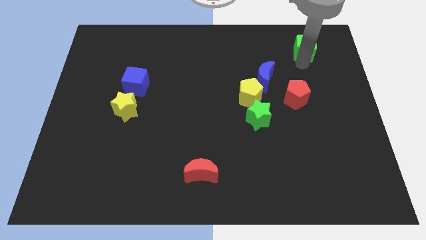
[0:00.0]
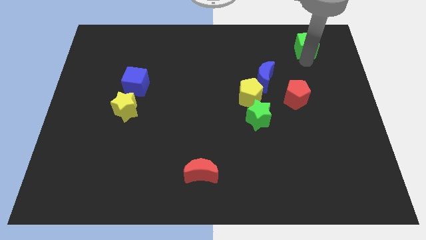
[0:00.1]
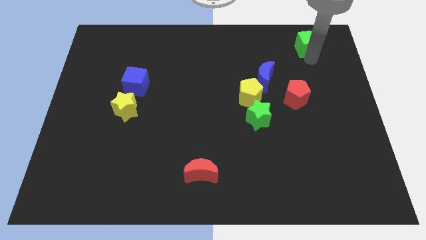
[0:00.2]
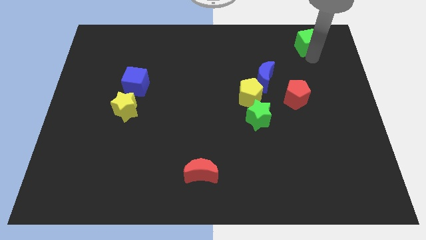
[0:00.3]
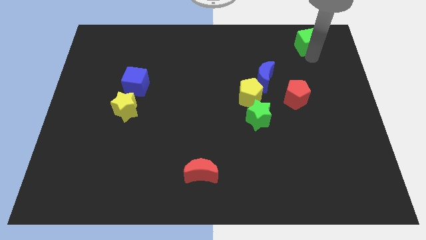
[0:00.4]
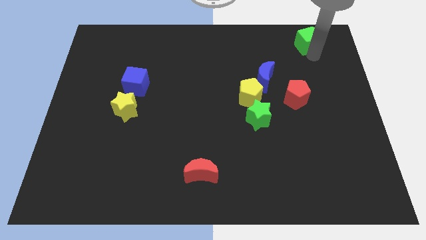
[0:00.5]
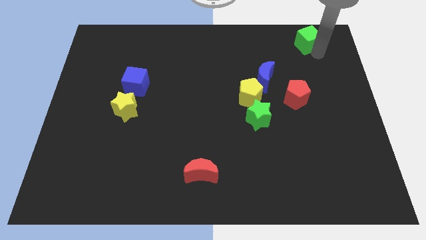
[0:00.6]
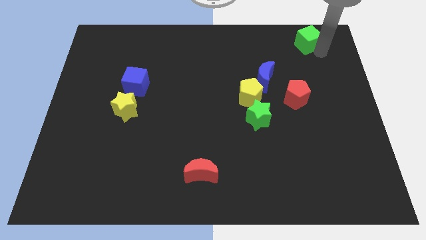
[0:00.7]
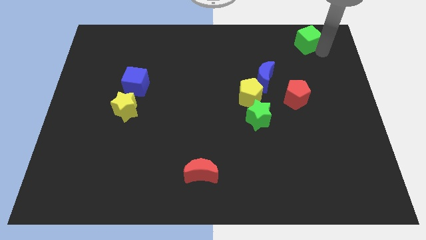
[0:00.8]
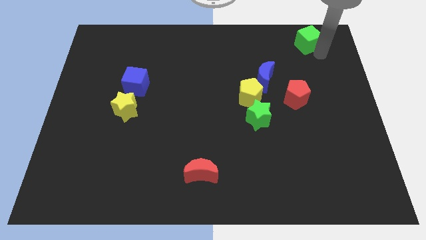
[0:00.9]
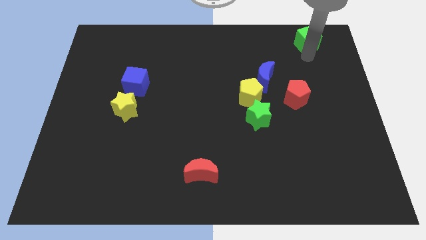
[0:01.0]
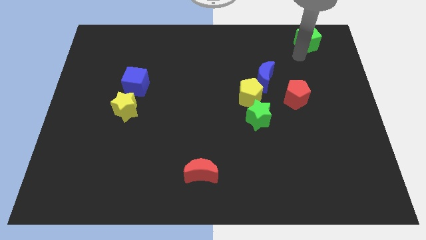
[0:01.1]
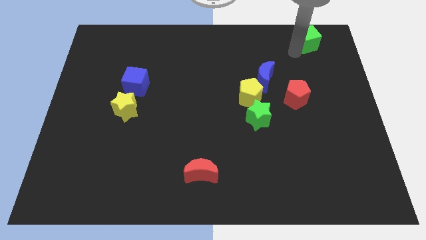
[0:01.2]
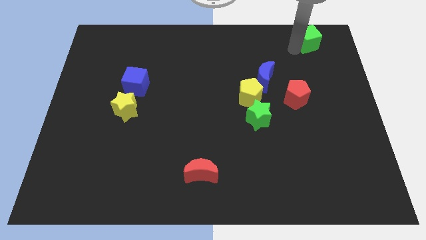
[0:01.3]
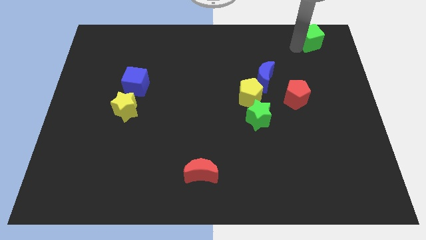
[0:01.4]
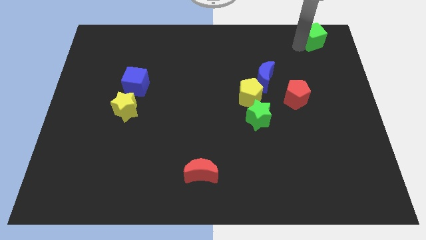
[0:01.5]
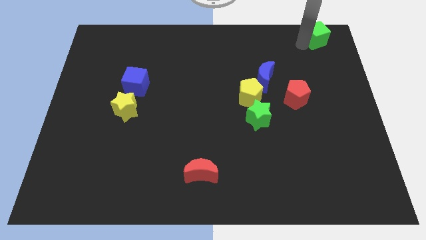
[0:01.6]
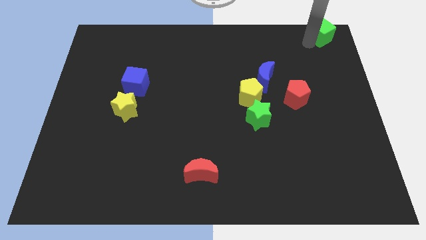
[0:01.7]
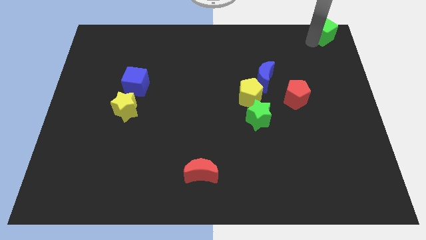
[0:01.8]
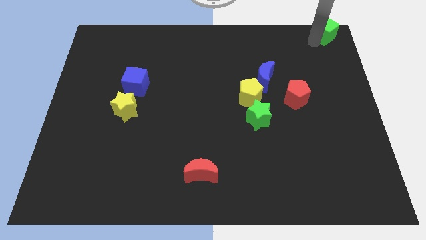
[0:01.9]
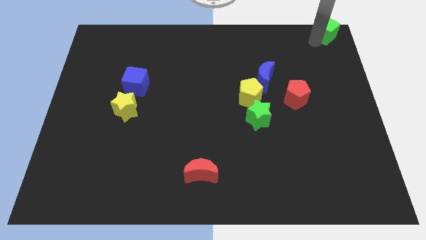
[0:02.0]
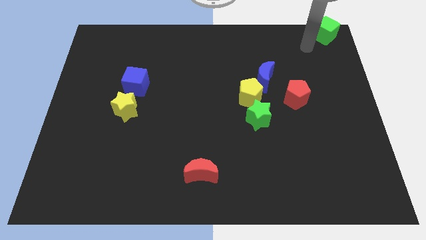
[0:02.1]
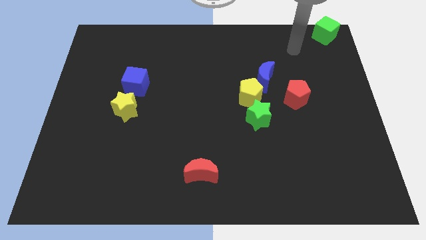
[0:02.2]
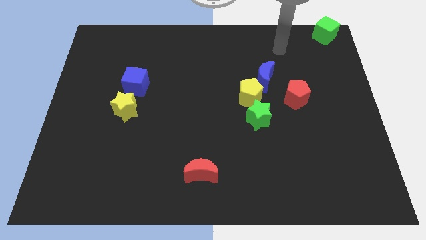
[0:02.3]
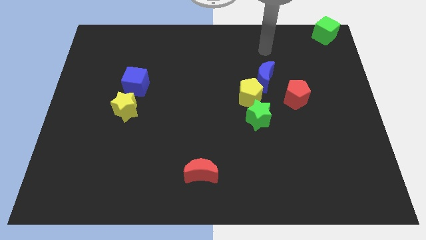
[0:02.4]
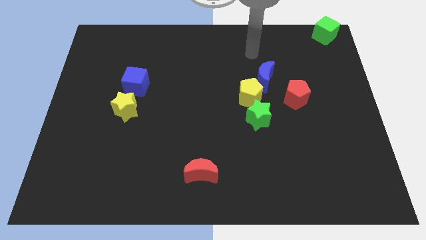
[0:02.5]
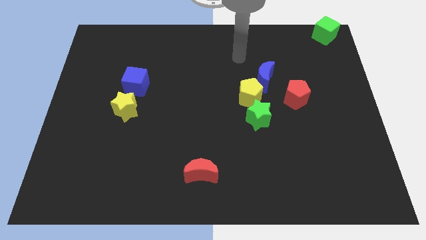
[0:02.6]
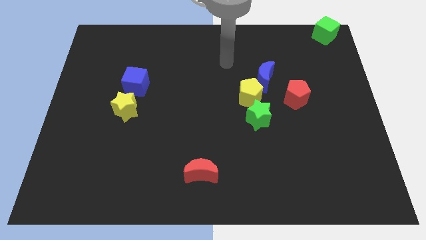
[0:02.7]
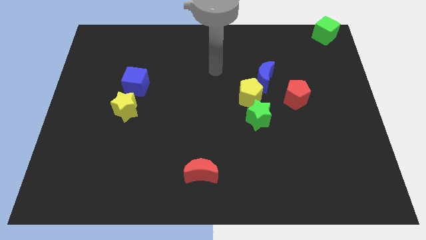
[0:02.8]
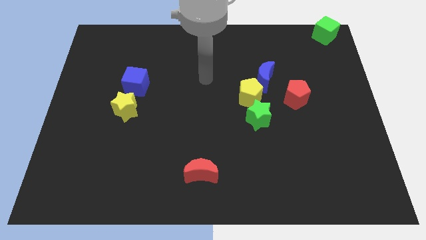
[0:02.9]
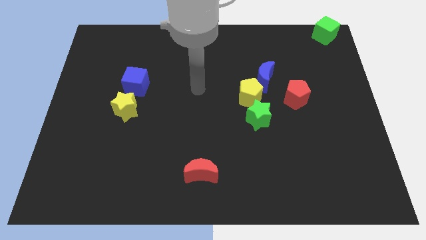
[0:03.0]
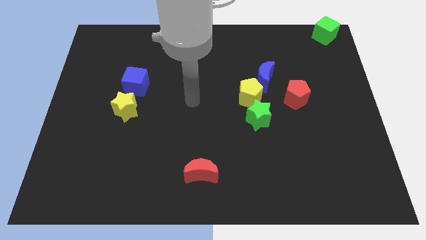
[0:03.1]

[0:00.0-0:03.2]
push green cube to the top right

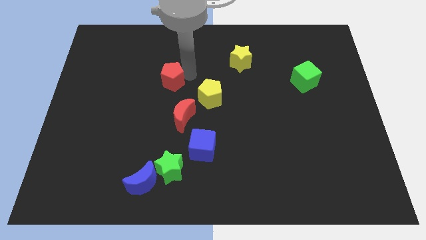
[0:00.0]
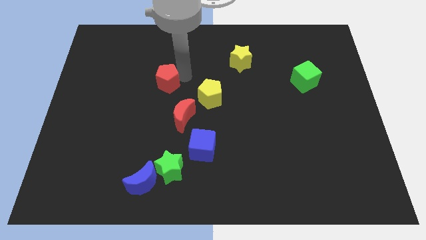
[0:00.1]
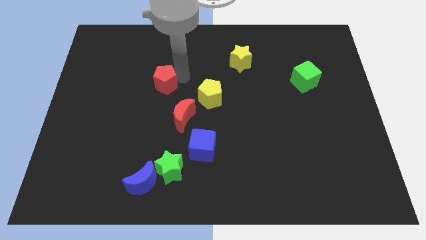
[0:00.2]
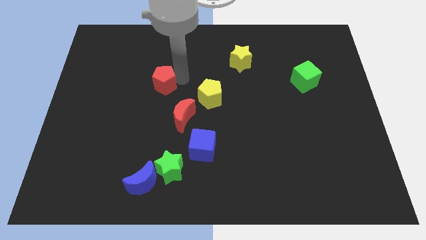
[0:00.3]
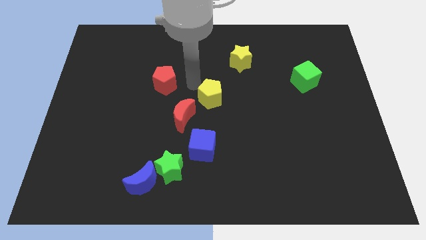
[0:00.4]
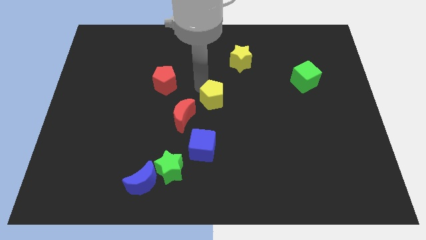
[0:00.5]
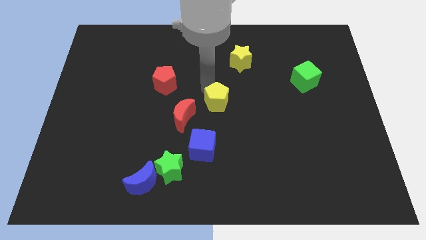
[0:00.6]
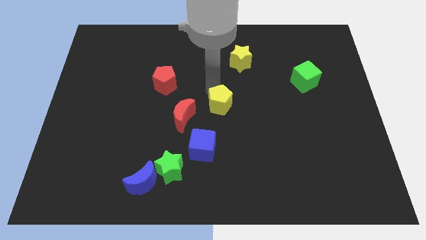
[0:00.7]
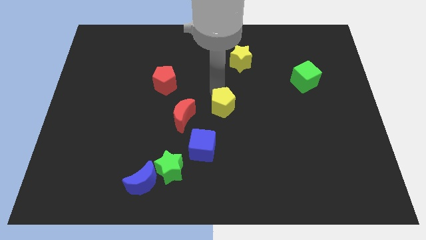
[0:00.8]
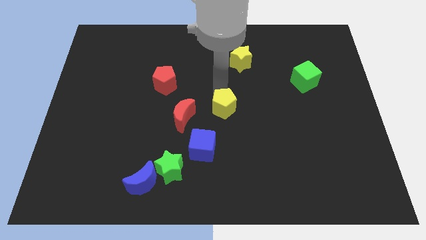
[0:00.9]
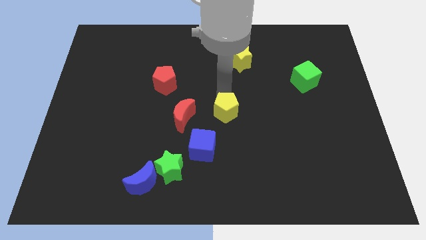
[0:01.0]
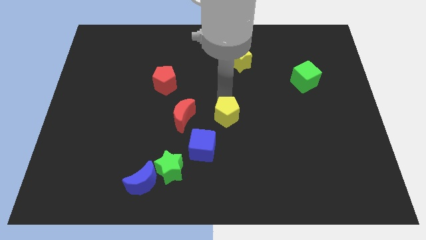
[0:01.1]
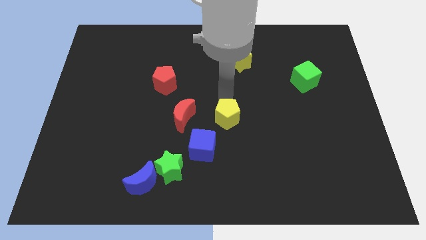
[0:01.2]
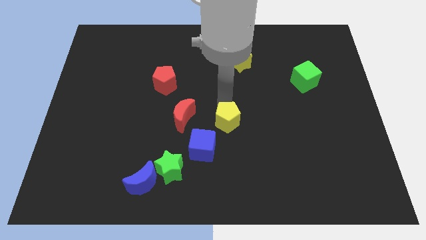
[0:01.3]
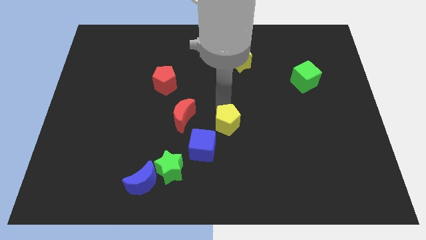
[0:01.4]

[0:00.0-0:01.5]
place the yellow pentagon diagonal to the blue cube

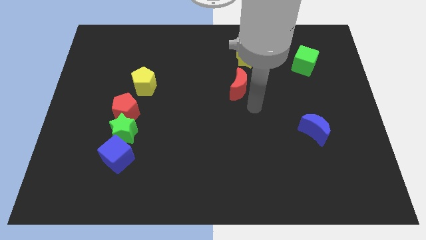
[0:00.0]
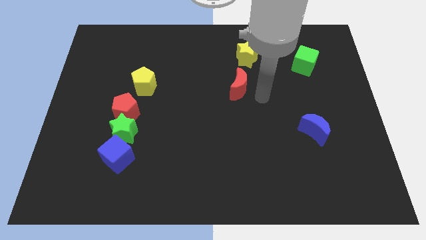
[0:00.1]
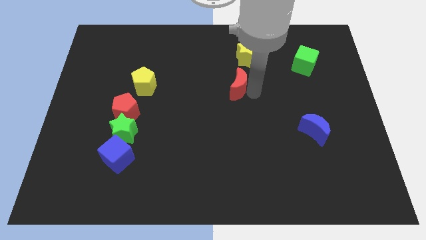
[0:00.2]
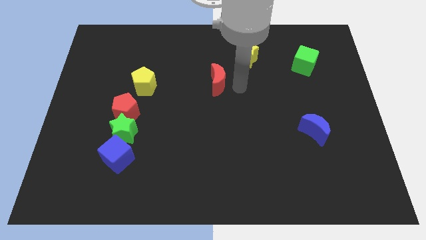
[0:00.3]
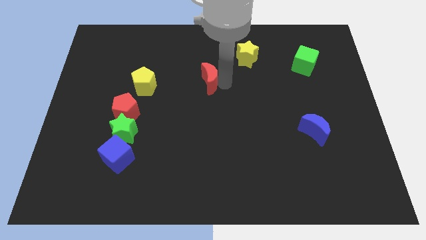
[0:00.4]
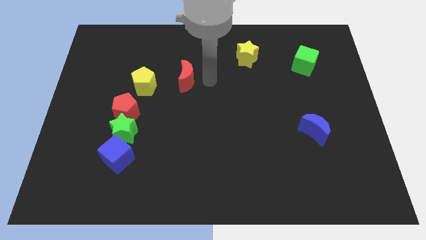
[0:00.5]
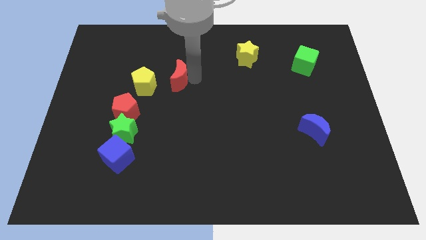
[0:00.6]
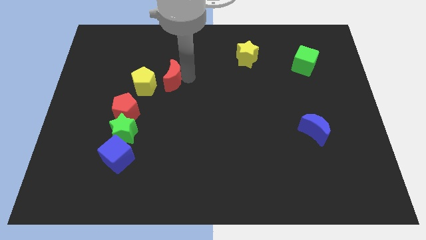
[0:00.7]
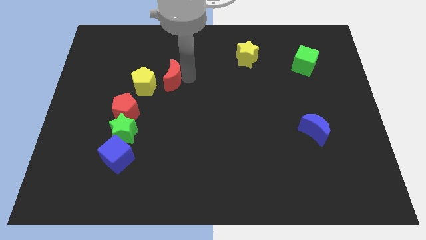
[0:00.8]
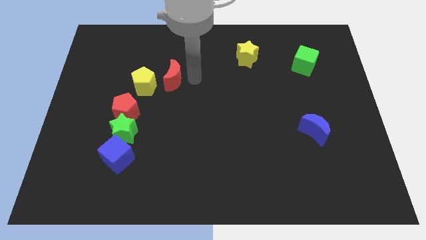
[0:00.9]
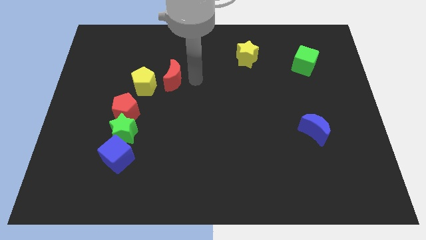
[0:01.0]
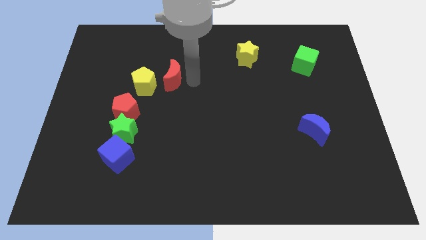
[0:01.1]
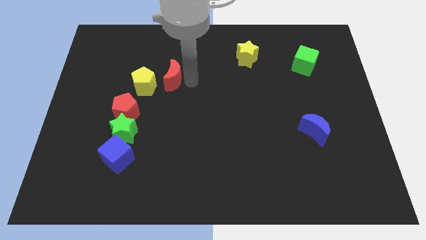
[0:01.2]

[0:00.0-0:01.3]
push the red crescent close to the yellow pentagon

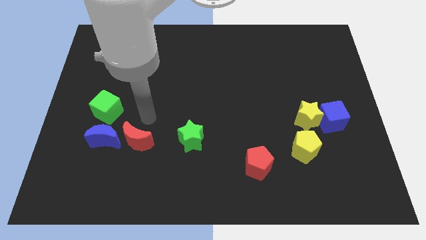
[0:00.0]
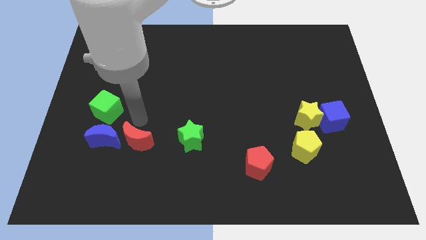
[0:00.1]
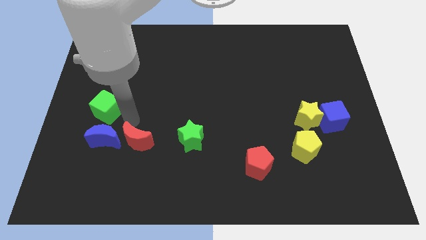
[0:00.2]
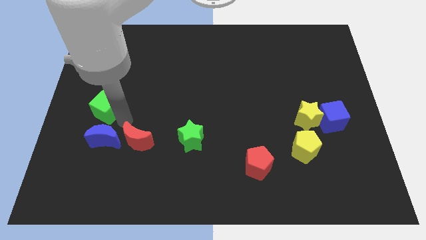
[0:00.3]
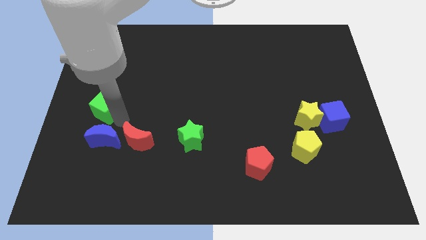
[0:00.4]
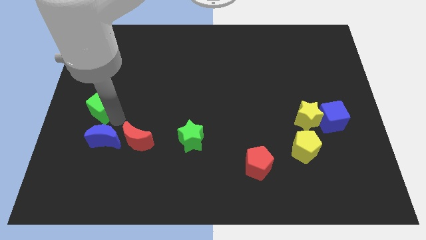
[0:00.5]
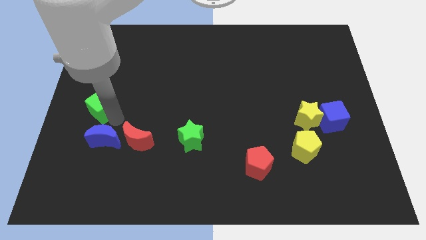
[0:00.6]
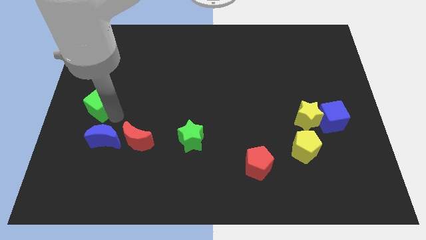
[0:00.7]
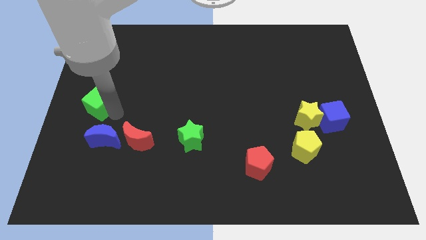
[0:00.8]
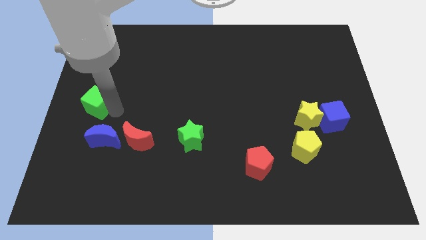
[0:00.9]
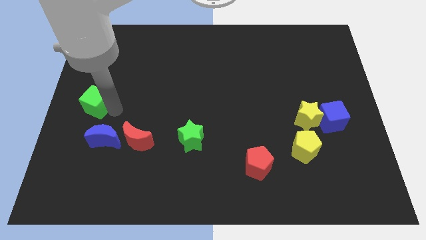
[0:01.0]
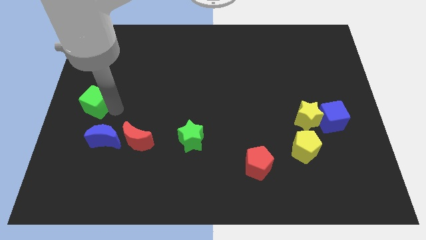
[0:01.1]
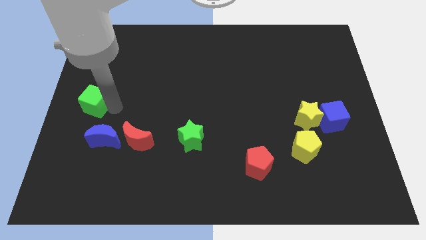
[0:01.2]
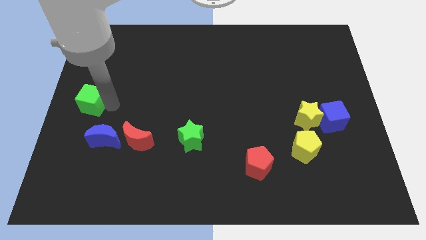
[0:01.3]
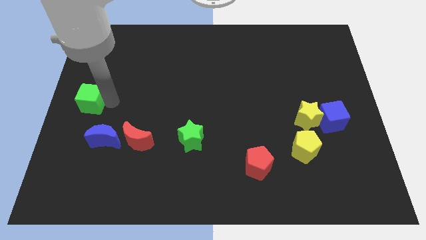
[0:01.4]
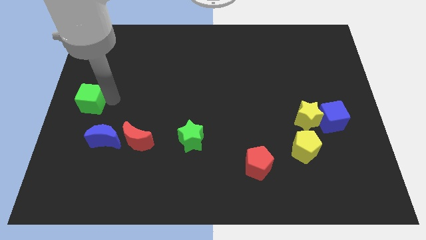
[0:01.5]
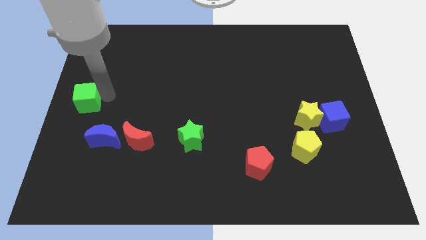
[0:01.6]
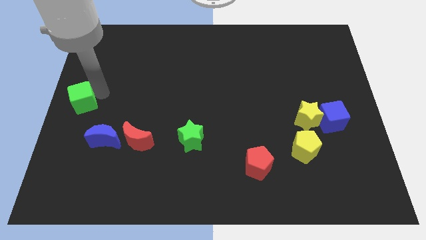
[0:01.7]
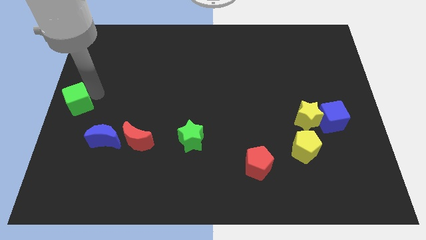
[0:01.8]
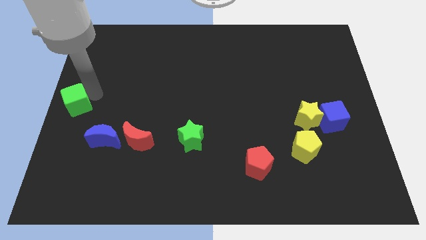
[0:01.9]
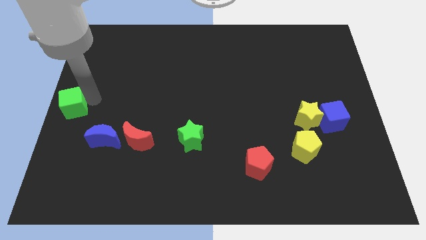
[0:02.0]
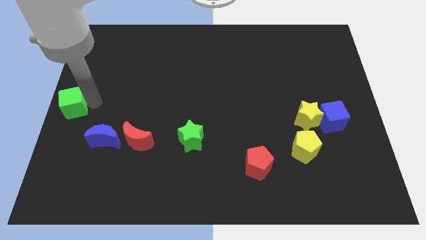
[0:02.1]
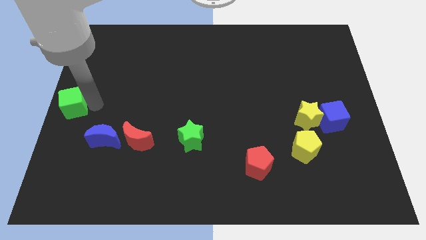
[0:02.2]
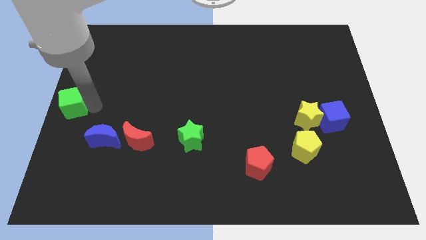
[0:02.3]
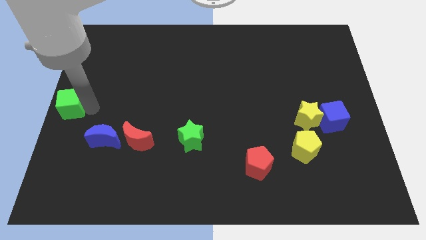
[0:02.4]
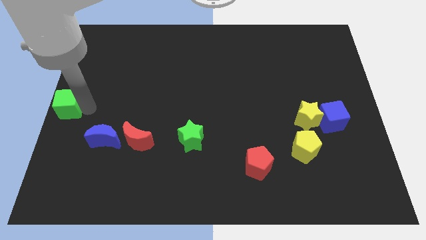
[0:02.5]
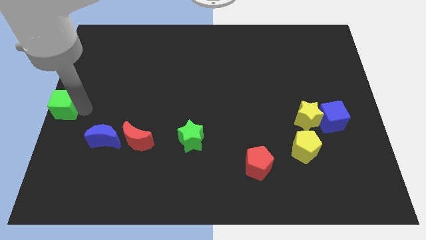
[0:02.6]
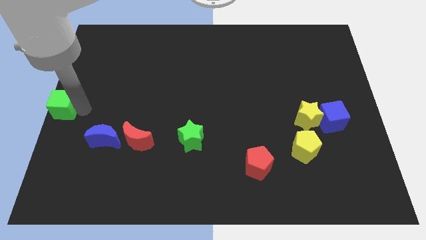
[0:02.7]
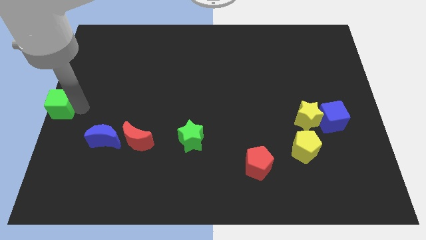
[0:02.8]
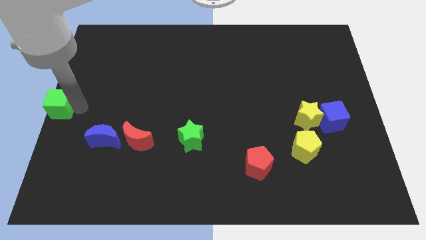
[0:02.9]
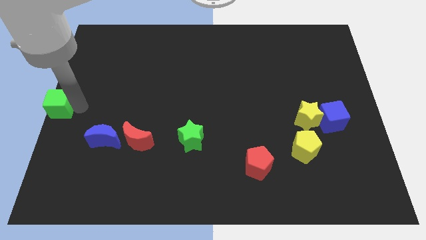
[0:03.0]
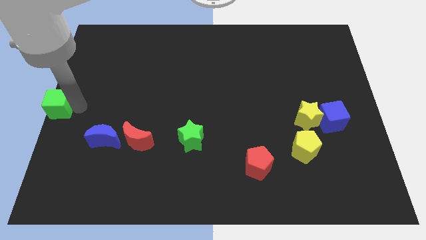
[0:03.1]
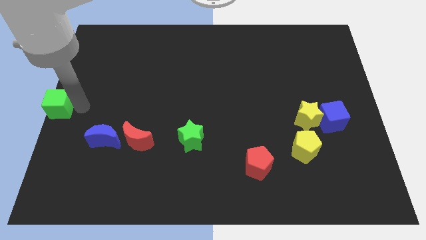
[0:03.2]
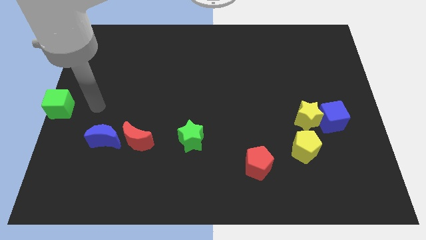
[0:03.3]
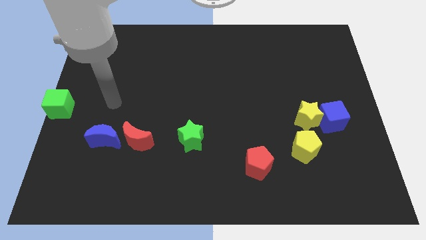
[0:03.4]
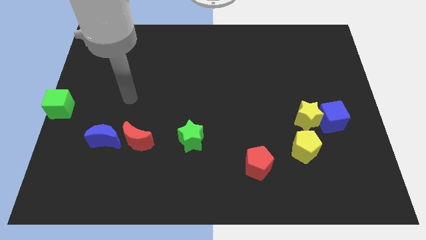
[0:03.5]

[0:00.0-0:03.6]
move the green cube to the center left side
